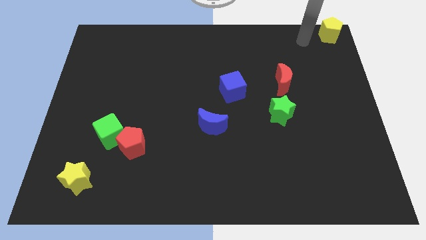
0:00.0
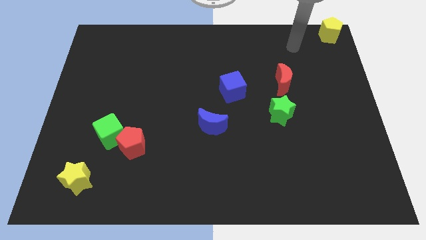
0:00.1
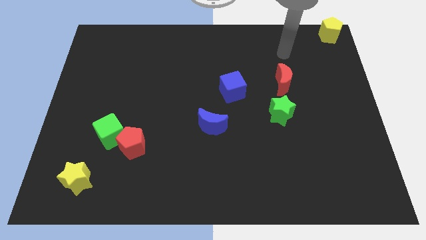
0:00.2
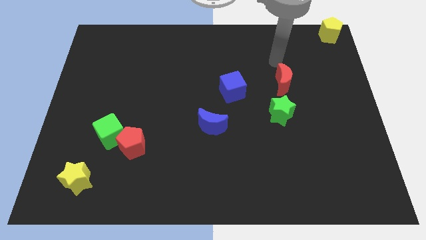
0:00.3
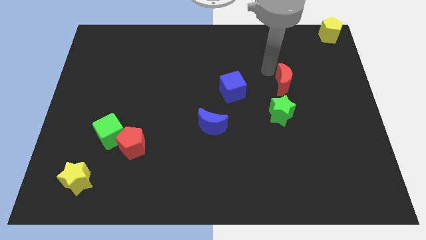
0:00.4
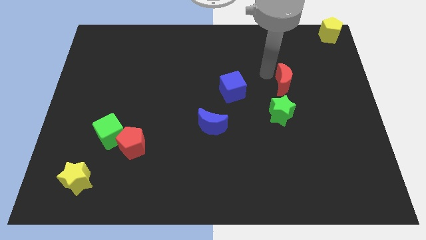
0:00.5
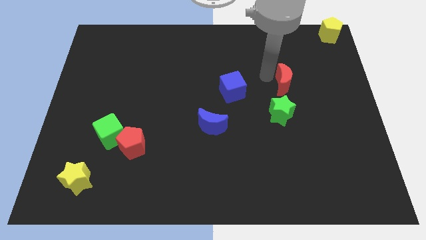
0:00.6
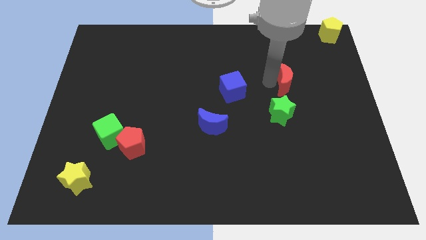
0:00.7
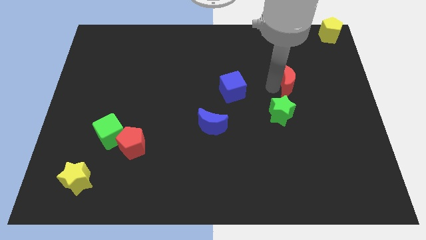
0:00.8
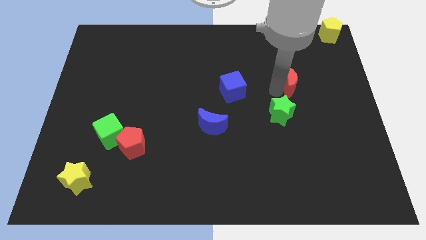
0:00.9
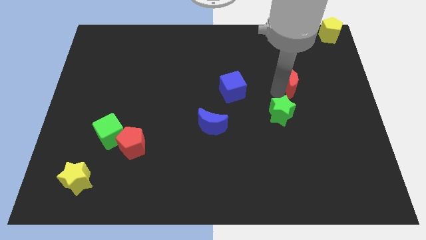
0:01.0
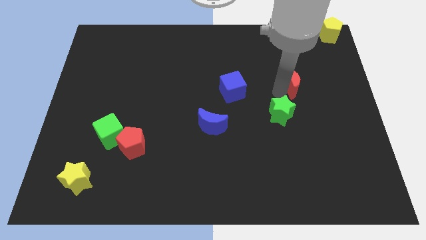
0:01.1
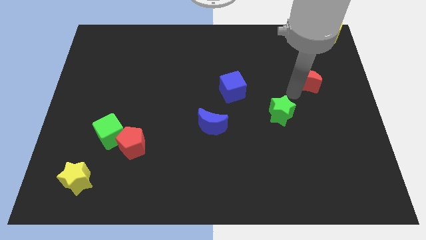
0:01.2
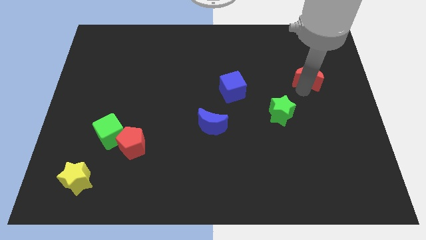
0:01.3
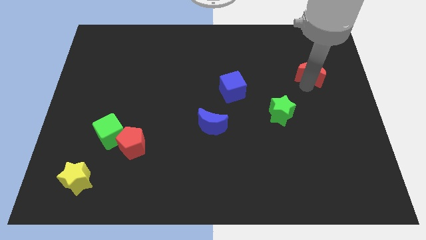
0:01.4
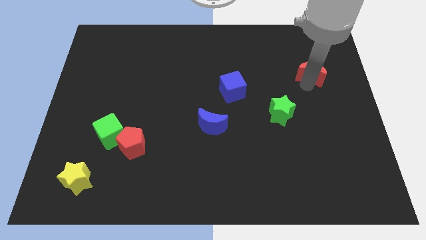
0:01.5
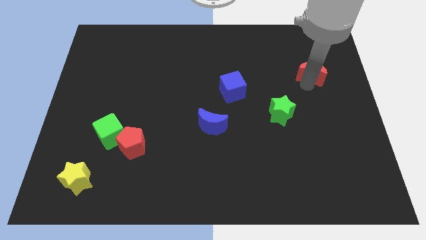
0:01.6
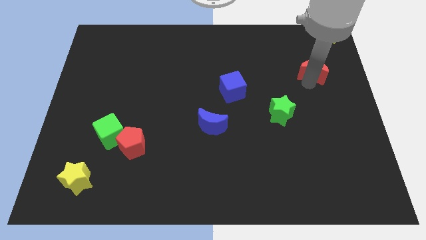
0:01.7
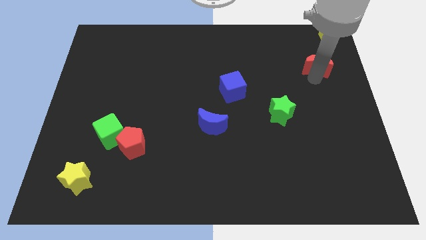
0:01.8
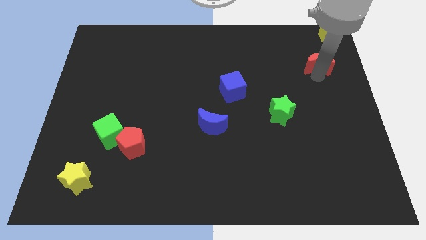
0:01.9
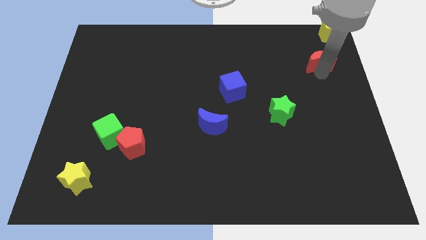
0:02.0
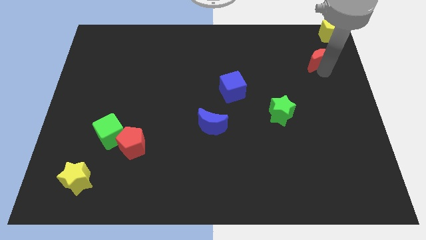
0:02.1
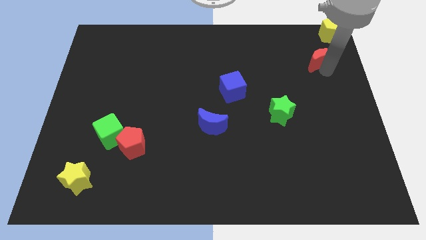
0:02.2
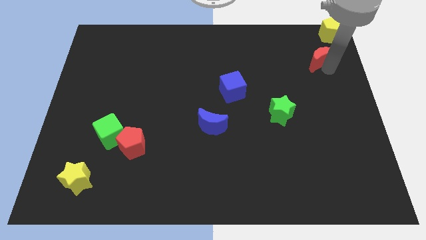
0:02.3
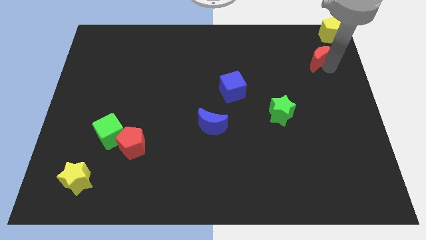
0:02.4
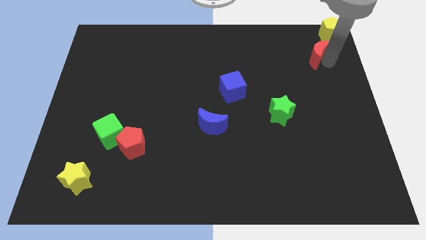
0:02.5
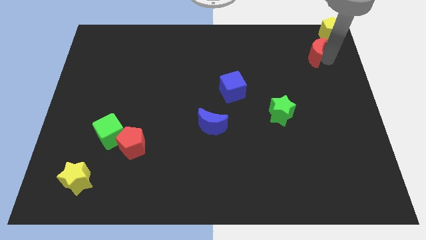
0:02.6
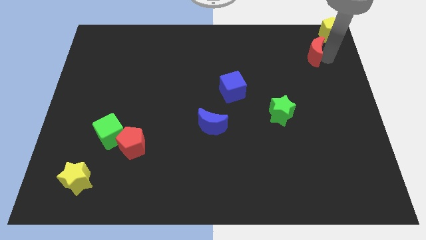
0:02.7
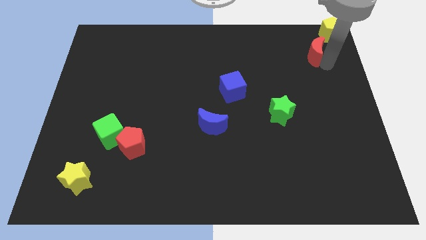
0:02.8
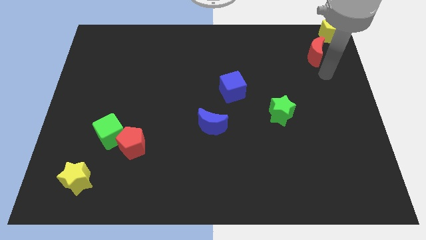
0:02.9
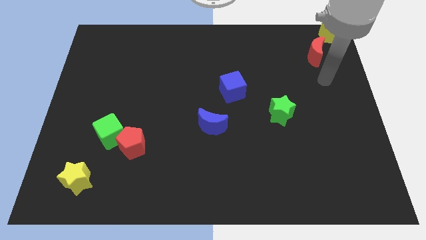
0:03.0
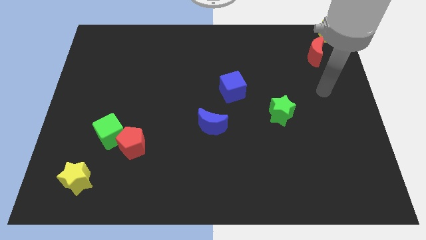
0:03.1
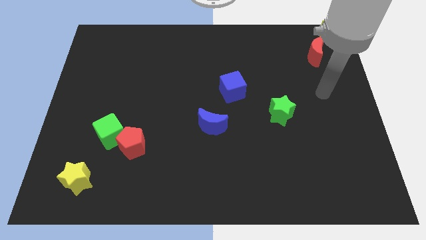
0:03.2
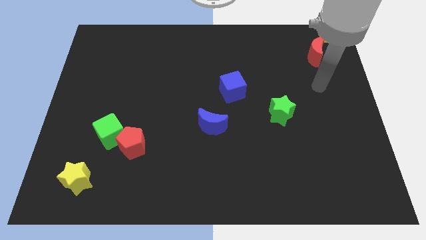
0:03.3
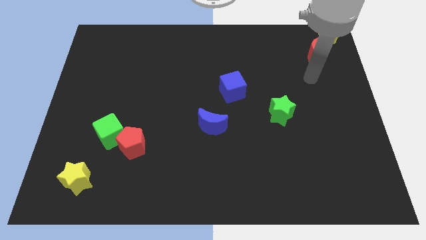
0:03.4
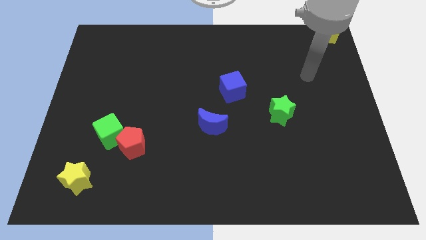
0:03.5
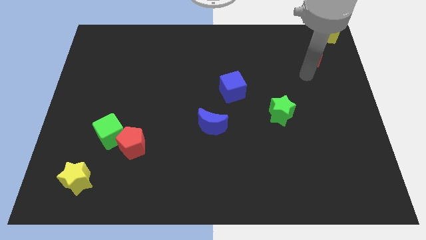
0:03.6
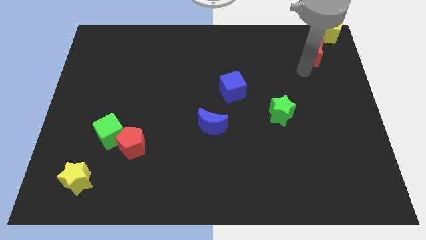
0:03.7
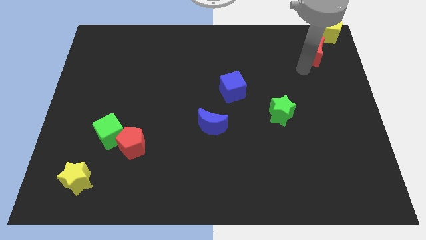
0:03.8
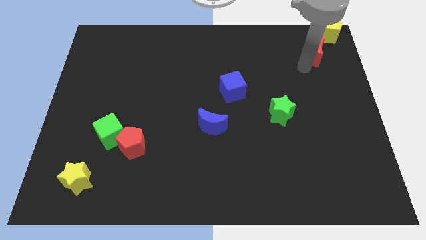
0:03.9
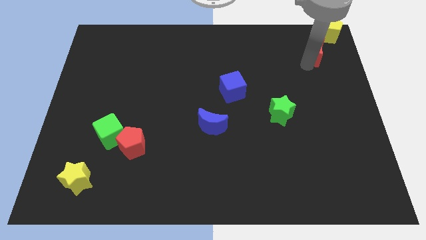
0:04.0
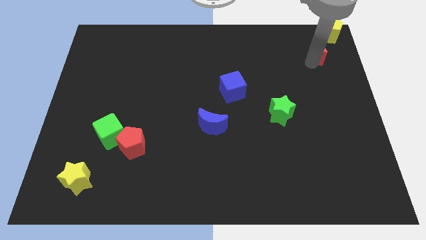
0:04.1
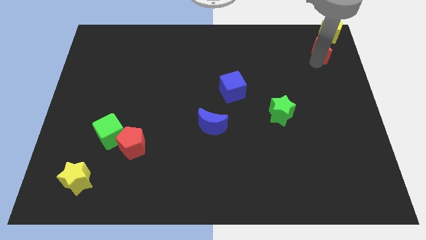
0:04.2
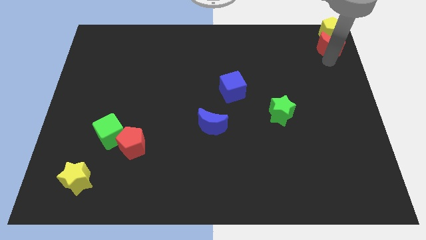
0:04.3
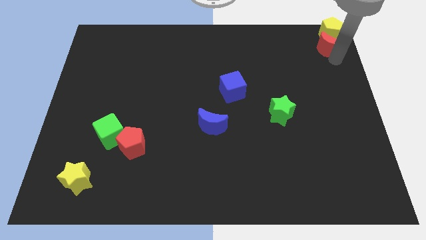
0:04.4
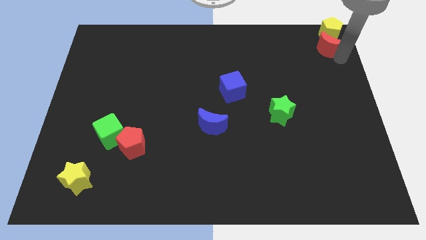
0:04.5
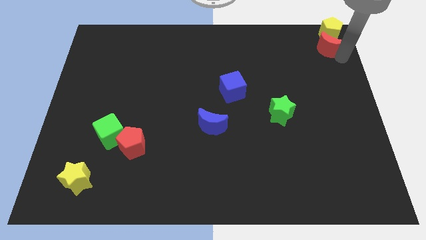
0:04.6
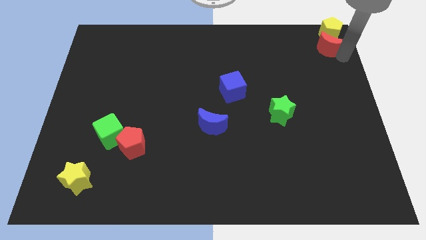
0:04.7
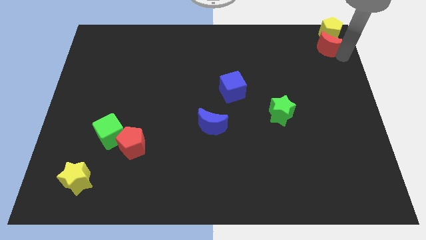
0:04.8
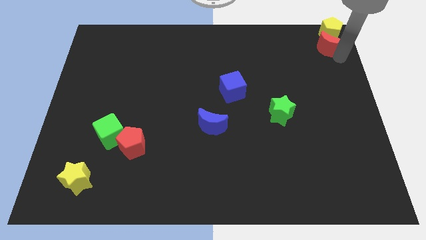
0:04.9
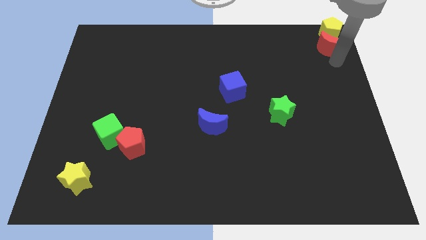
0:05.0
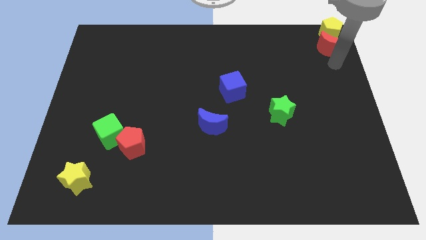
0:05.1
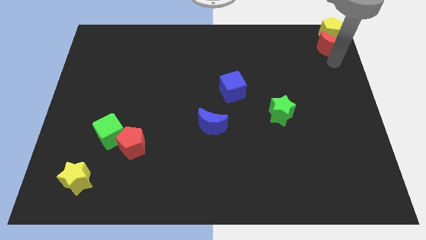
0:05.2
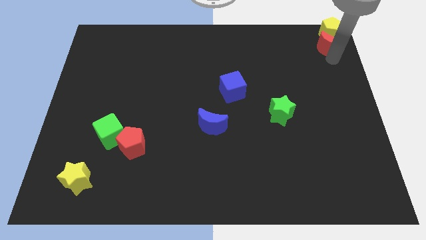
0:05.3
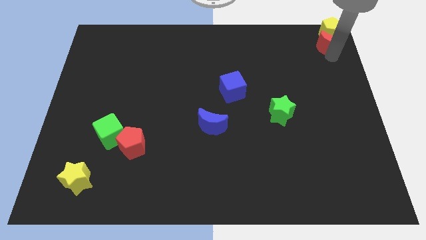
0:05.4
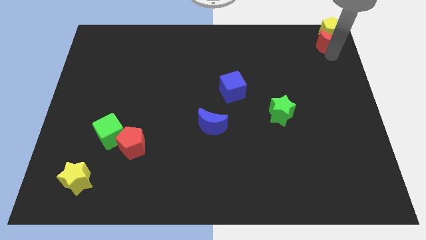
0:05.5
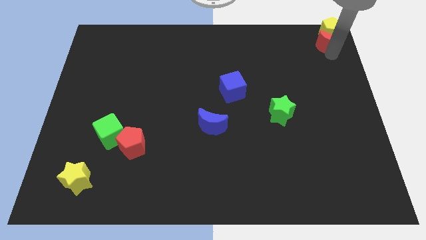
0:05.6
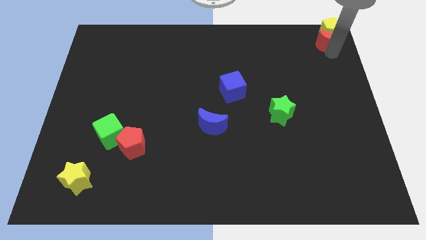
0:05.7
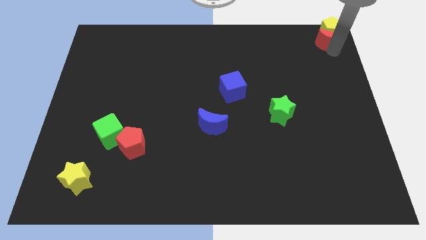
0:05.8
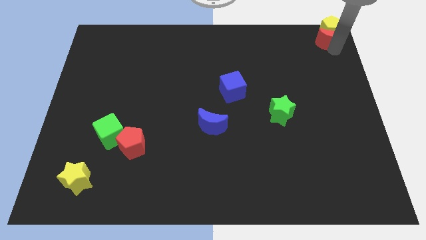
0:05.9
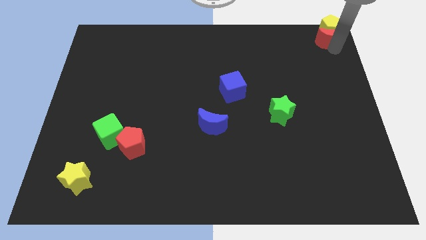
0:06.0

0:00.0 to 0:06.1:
push the red crescen tinto the bottom side of the yellow pentagon

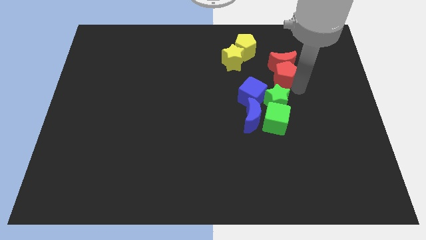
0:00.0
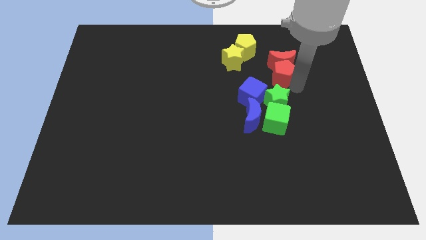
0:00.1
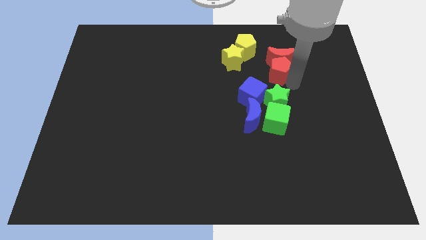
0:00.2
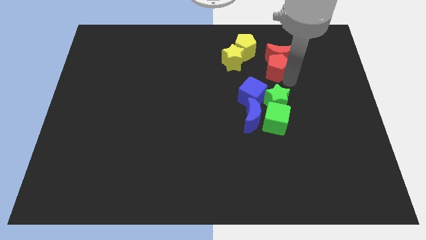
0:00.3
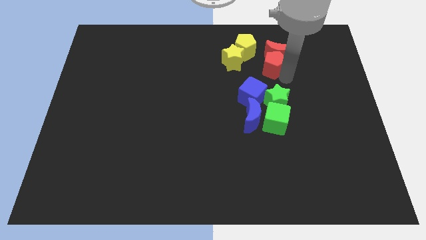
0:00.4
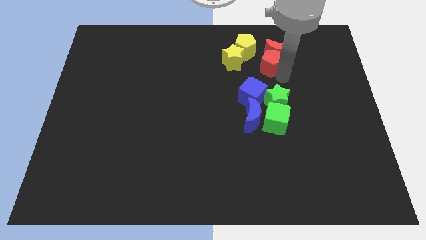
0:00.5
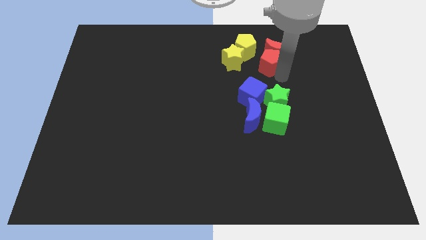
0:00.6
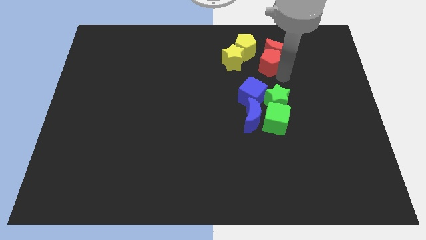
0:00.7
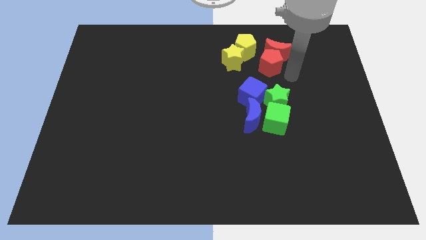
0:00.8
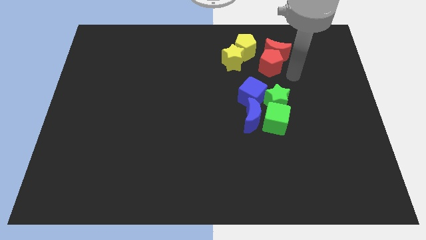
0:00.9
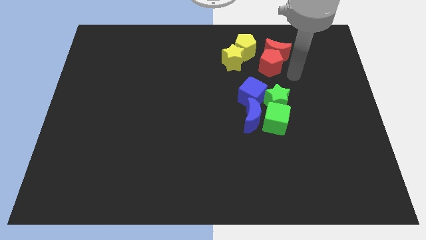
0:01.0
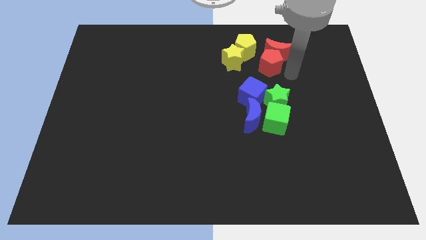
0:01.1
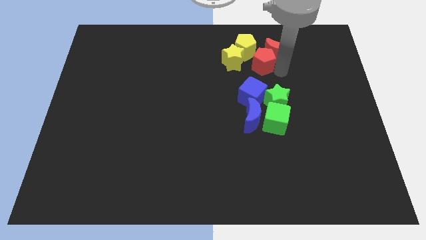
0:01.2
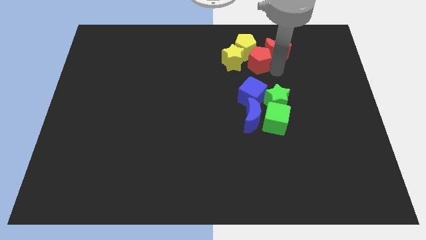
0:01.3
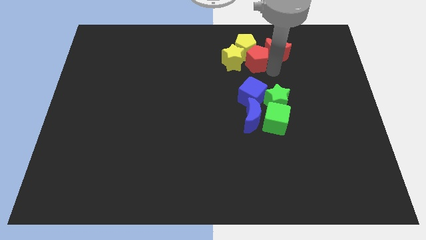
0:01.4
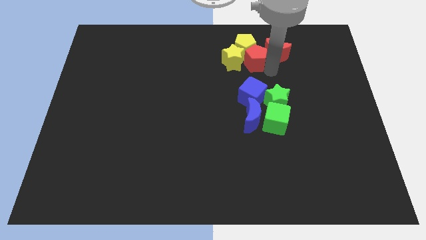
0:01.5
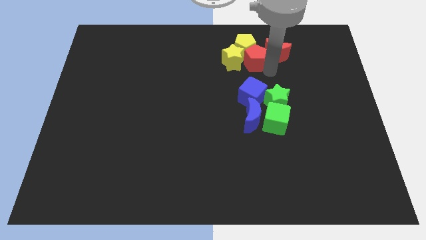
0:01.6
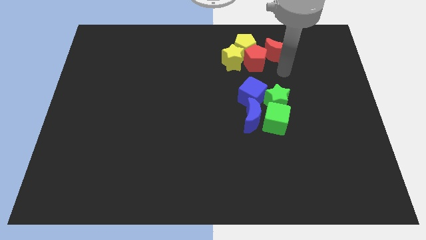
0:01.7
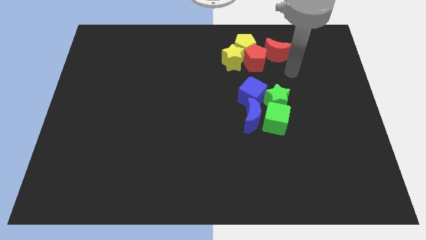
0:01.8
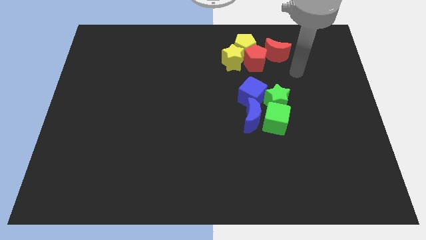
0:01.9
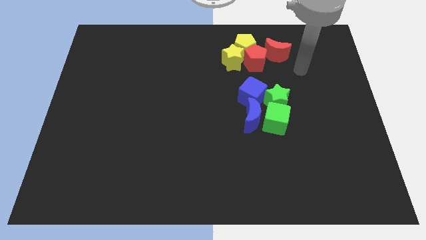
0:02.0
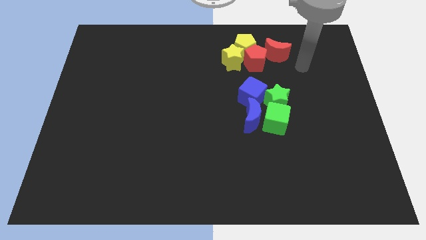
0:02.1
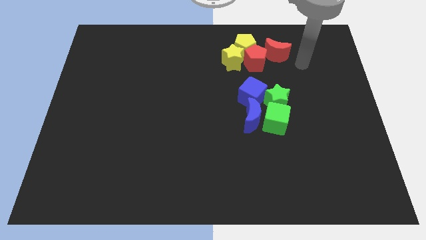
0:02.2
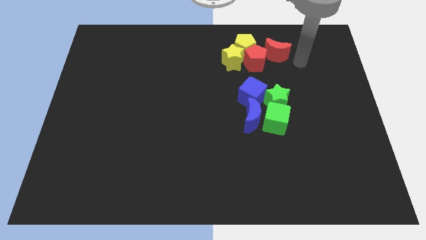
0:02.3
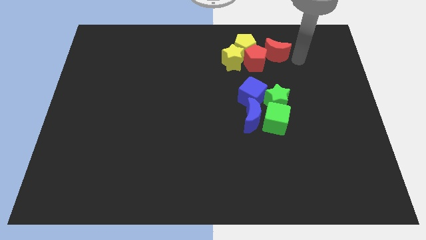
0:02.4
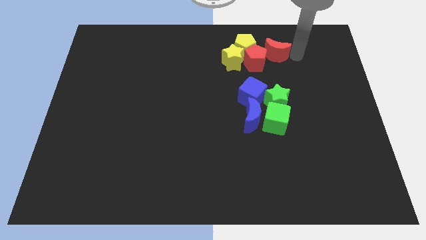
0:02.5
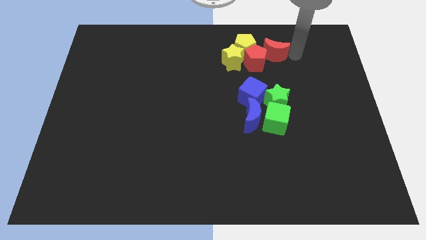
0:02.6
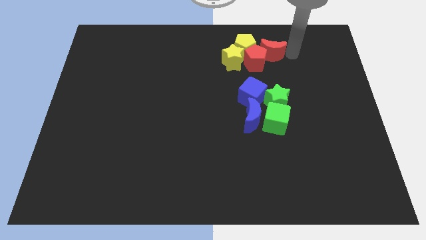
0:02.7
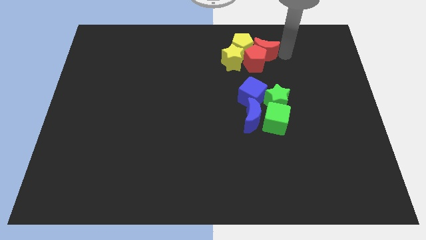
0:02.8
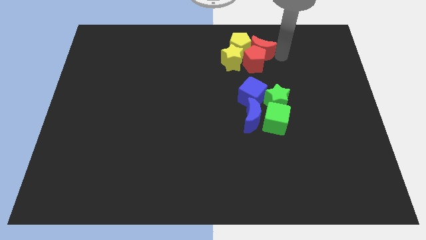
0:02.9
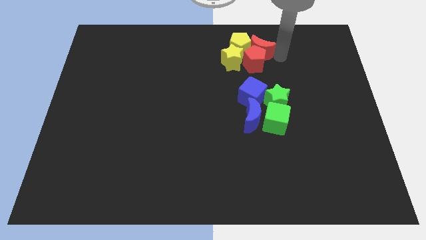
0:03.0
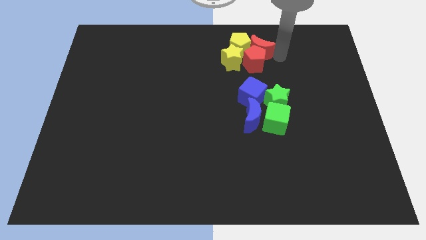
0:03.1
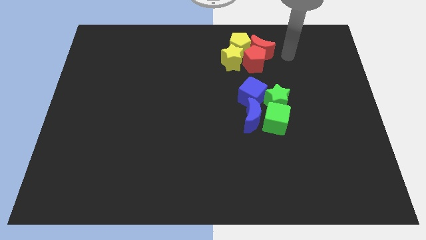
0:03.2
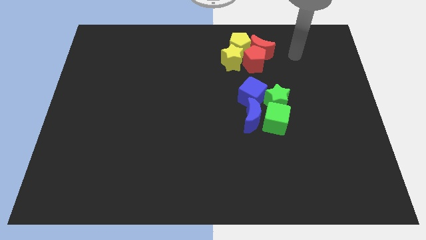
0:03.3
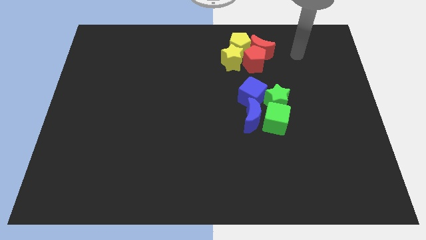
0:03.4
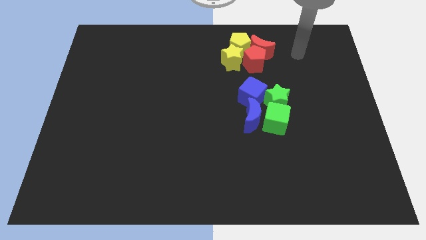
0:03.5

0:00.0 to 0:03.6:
push red pentagon into the group of blocks
